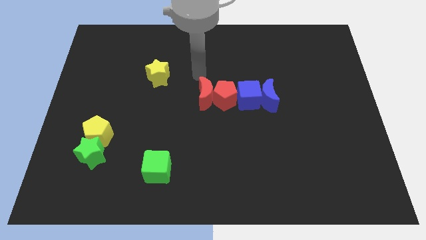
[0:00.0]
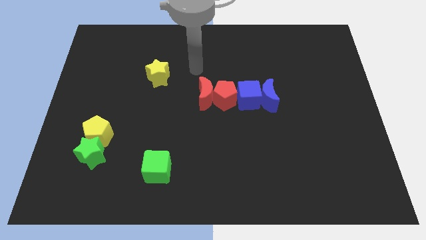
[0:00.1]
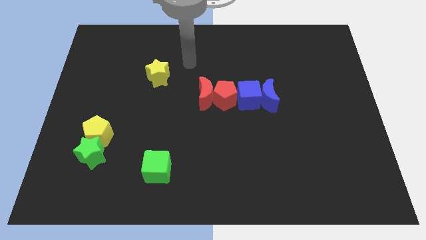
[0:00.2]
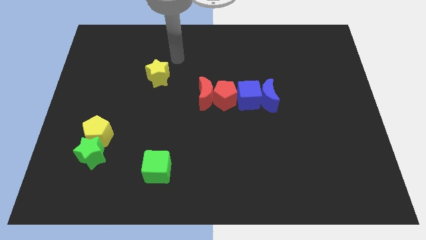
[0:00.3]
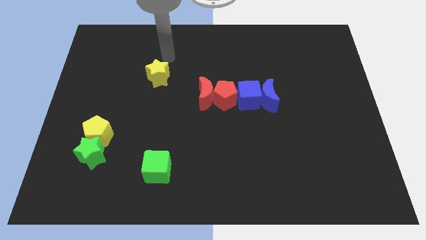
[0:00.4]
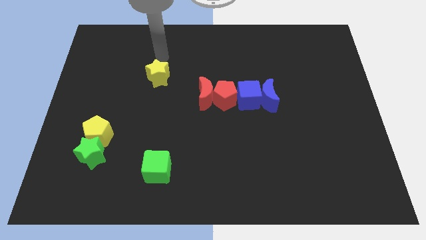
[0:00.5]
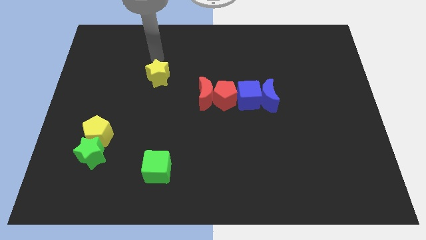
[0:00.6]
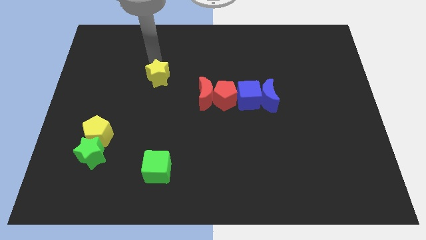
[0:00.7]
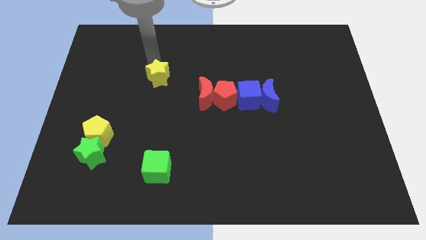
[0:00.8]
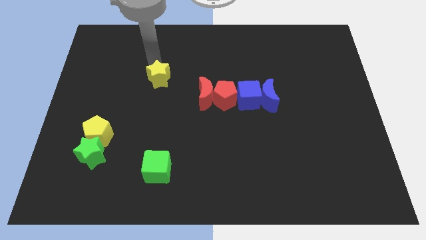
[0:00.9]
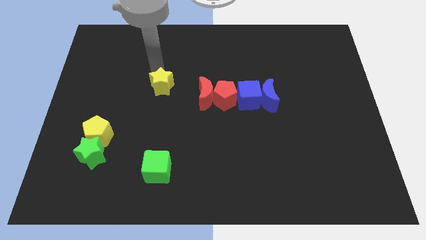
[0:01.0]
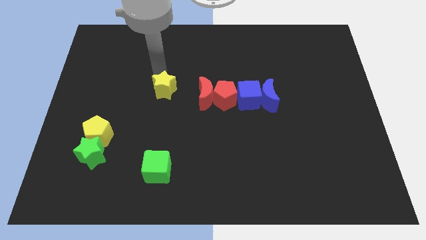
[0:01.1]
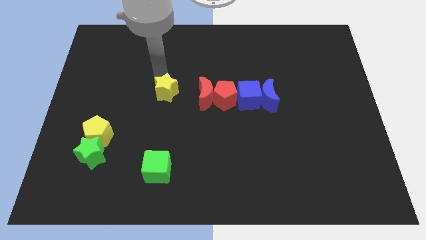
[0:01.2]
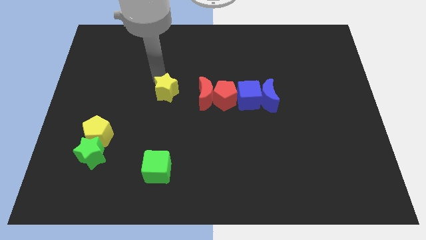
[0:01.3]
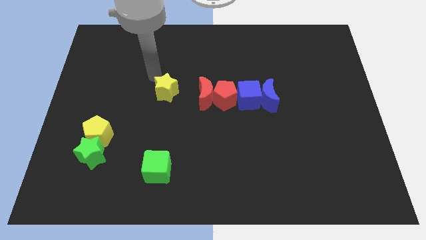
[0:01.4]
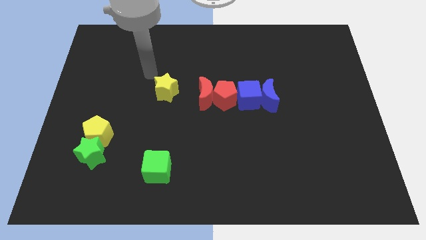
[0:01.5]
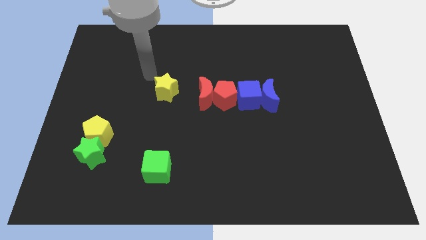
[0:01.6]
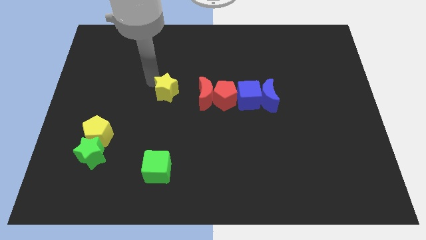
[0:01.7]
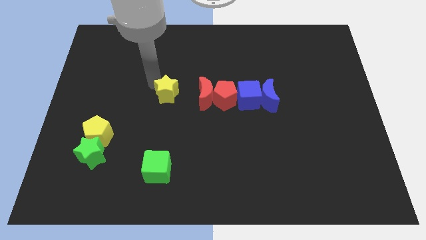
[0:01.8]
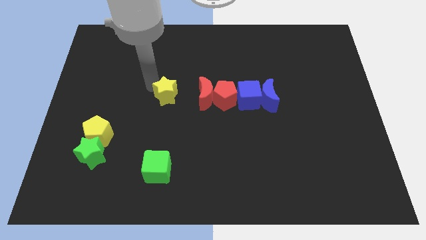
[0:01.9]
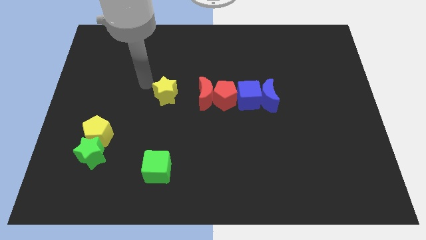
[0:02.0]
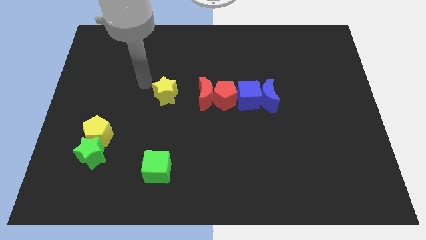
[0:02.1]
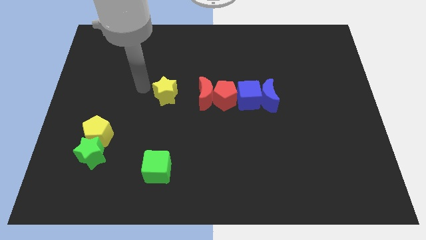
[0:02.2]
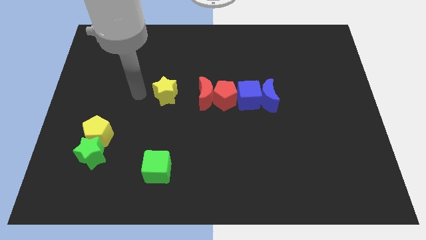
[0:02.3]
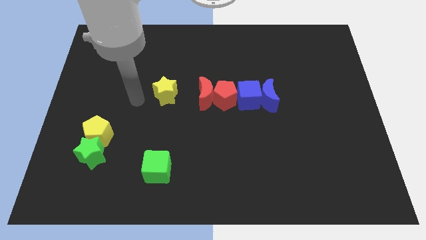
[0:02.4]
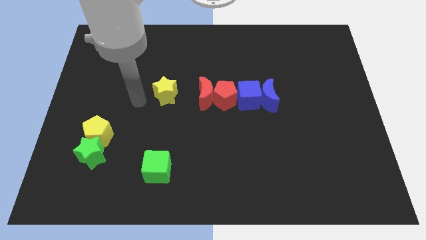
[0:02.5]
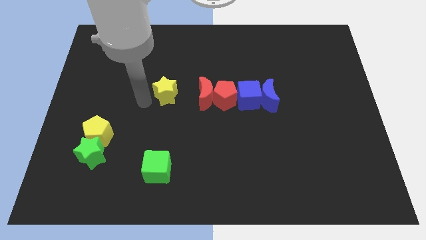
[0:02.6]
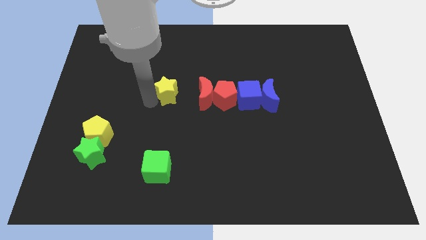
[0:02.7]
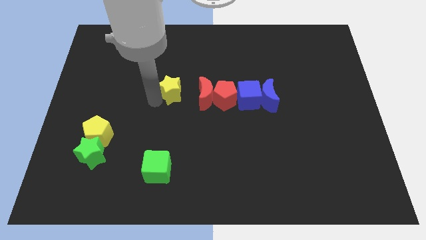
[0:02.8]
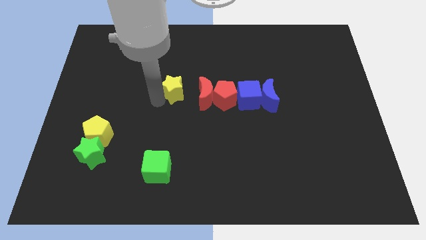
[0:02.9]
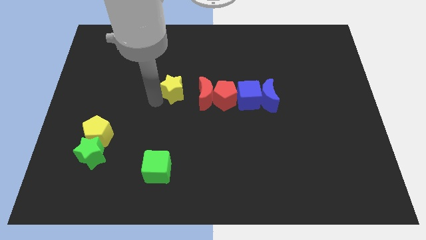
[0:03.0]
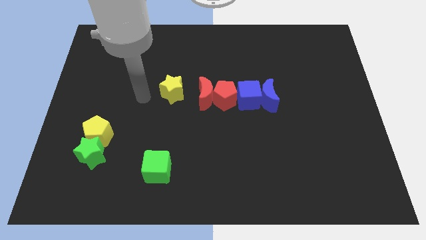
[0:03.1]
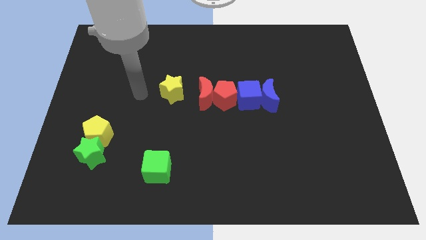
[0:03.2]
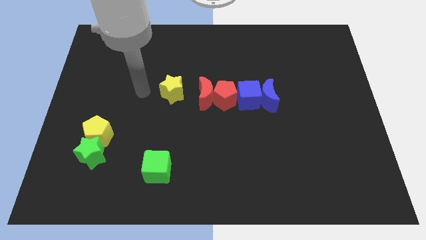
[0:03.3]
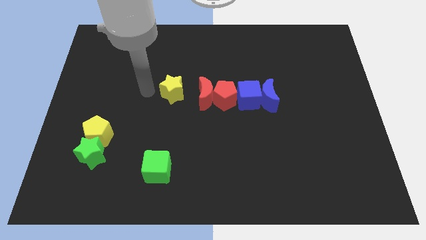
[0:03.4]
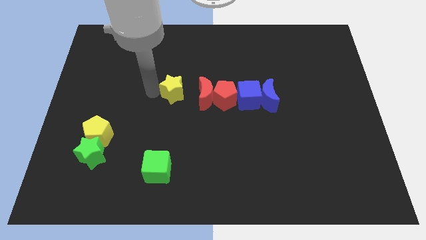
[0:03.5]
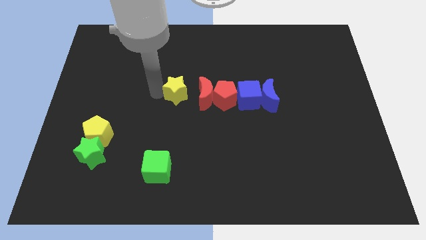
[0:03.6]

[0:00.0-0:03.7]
move the yellow star parallel left to the red crescent

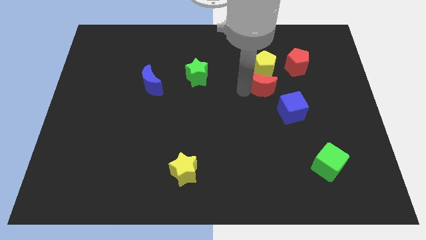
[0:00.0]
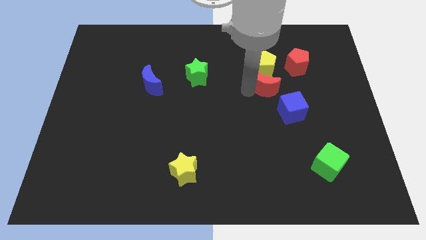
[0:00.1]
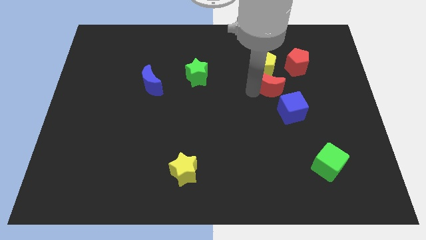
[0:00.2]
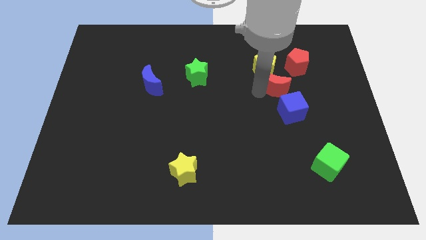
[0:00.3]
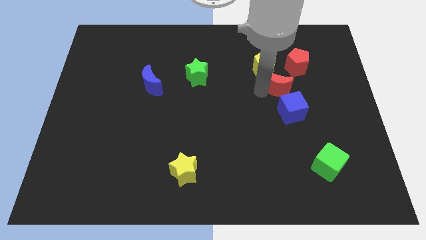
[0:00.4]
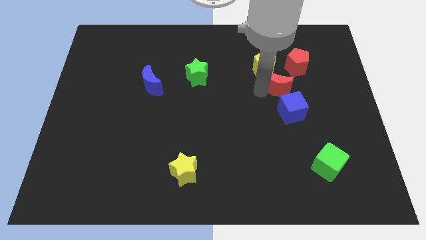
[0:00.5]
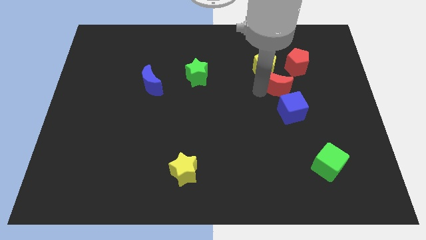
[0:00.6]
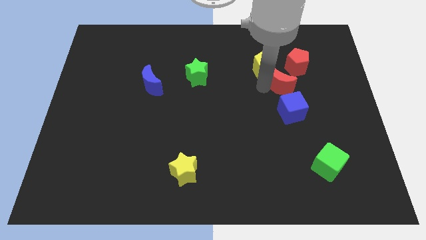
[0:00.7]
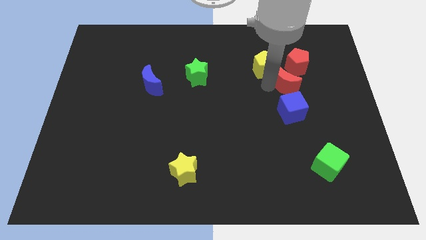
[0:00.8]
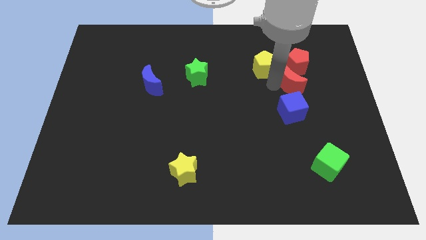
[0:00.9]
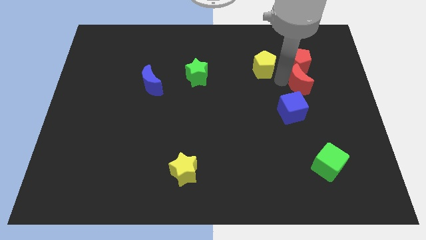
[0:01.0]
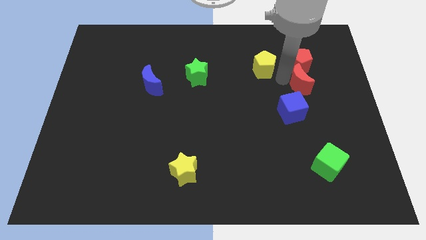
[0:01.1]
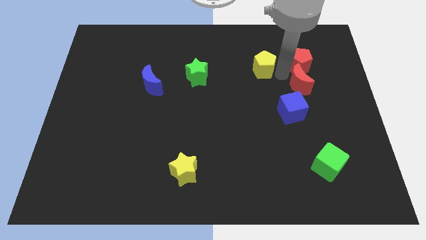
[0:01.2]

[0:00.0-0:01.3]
push the red crescent into red pentagon

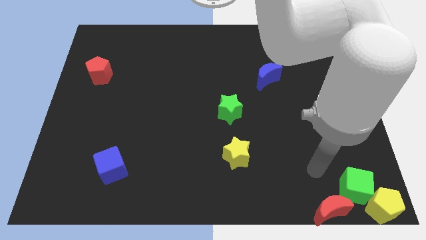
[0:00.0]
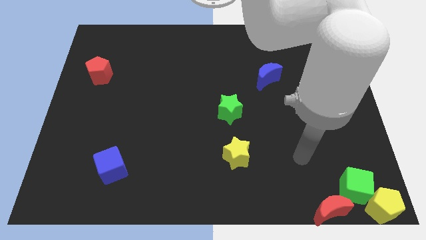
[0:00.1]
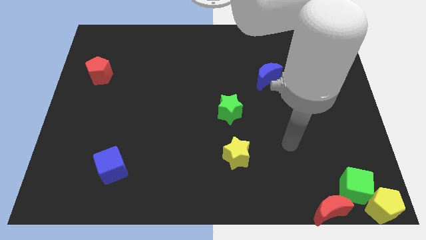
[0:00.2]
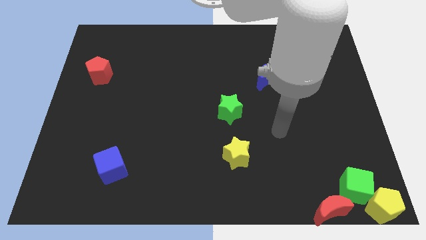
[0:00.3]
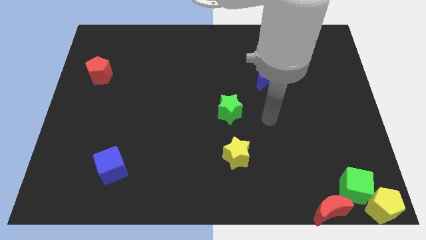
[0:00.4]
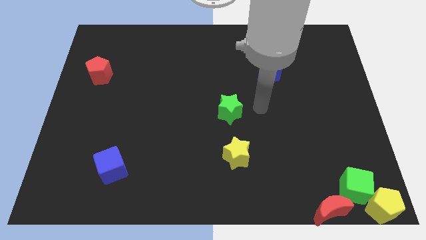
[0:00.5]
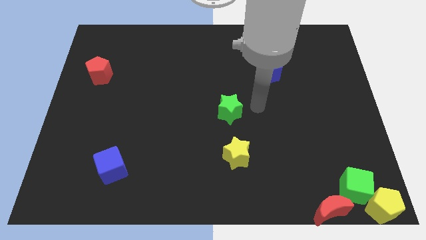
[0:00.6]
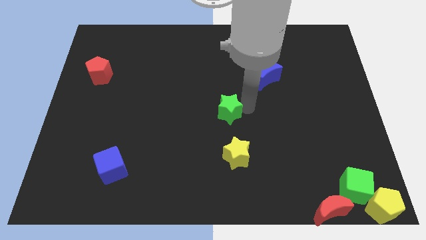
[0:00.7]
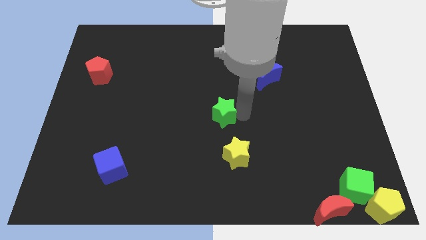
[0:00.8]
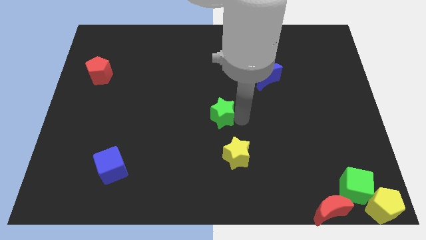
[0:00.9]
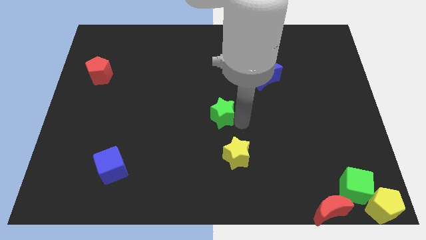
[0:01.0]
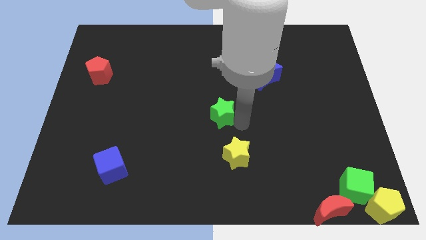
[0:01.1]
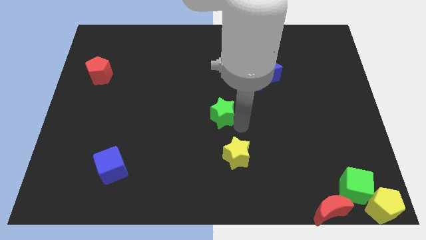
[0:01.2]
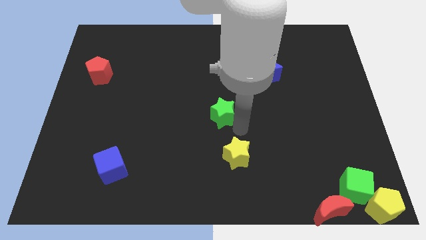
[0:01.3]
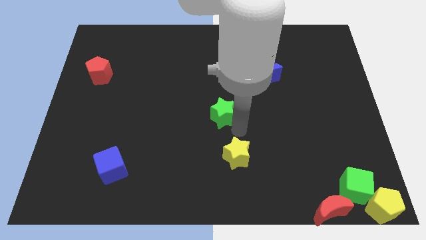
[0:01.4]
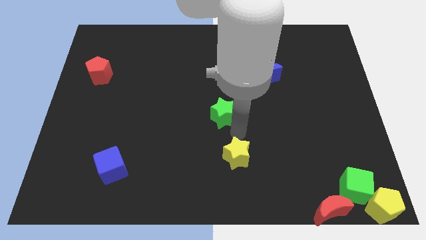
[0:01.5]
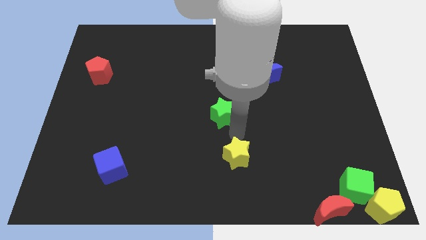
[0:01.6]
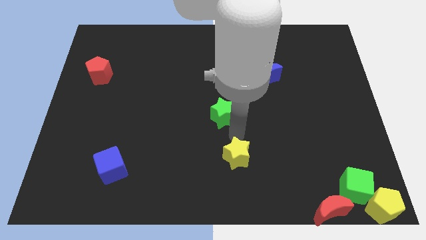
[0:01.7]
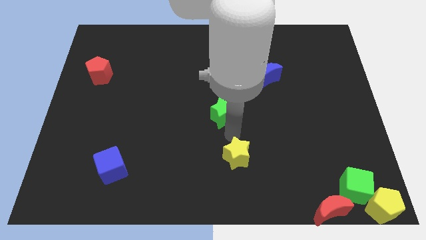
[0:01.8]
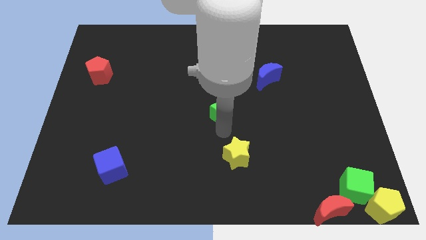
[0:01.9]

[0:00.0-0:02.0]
place your hand in between the green star and yellow star

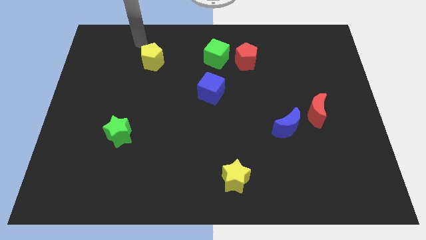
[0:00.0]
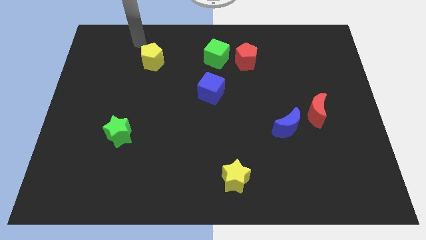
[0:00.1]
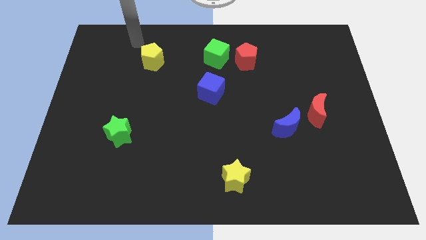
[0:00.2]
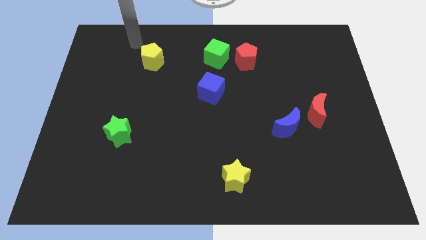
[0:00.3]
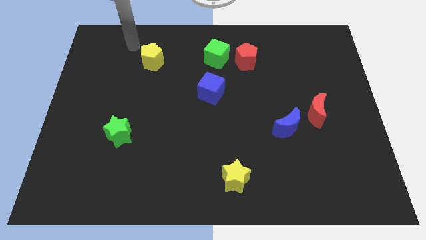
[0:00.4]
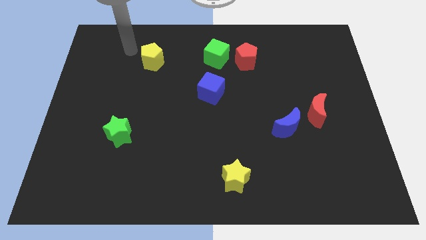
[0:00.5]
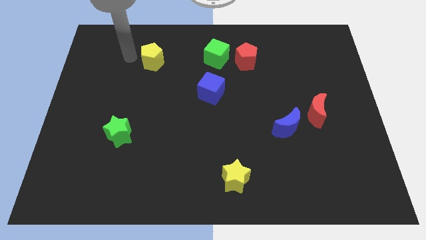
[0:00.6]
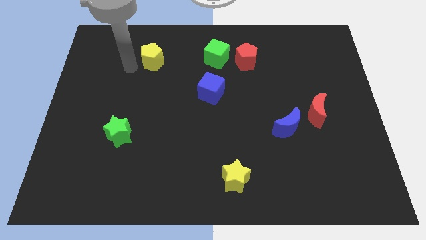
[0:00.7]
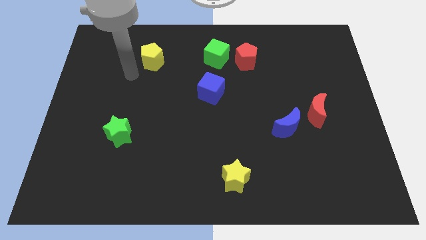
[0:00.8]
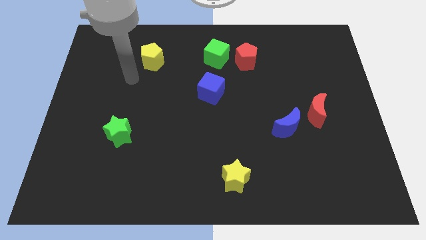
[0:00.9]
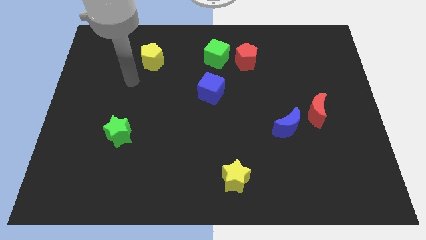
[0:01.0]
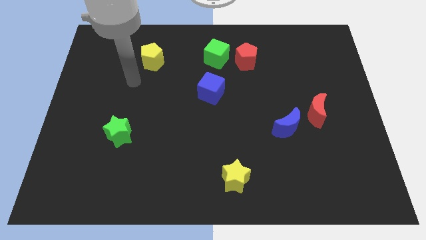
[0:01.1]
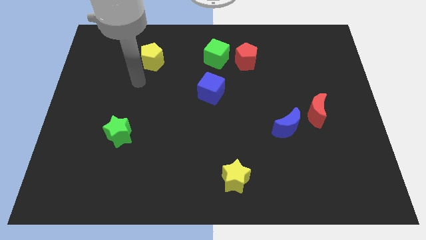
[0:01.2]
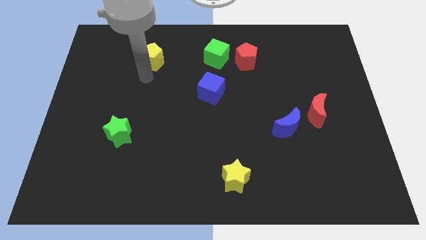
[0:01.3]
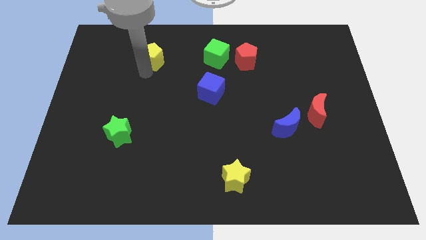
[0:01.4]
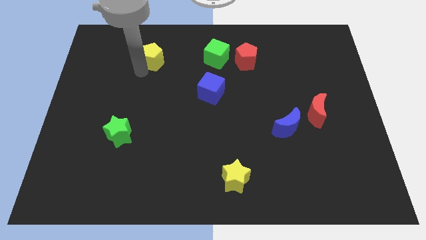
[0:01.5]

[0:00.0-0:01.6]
place your hand to the bottom of yellow pentagon

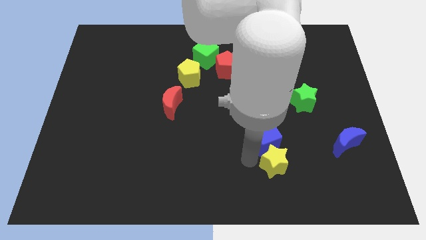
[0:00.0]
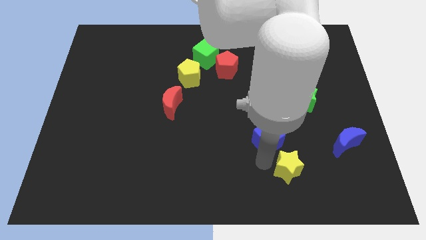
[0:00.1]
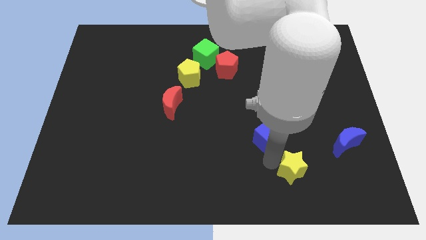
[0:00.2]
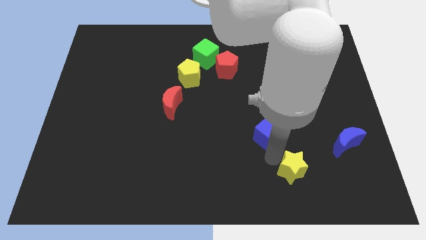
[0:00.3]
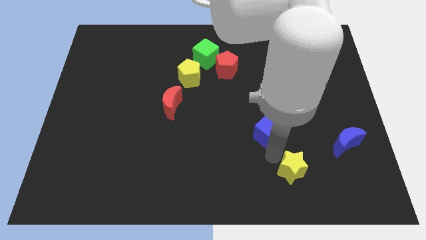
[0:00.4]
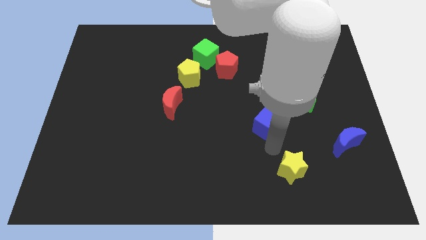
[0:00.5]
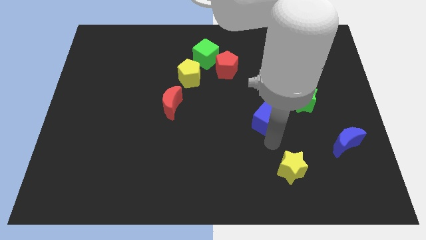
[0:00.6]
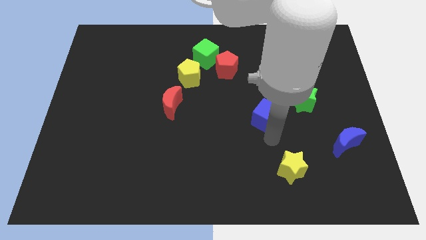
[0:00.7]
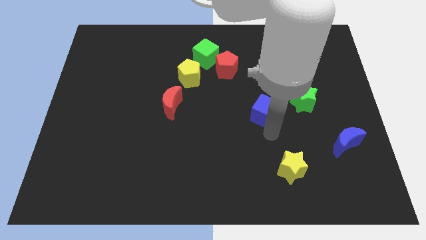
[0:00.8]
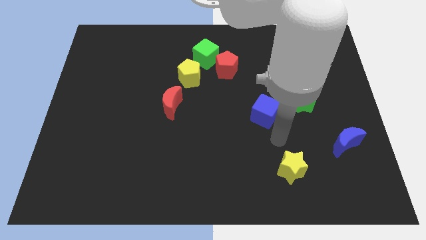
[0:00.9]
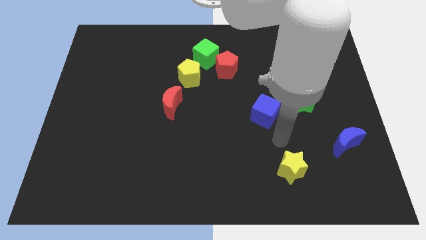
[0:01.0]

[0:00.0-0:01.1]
separate the blue cube and yellow star
